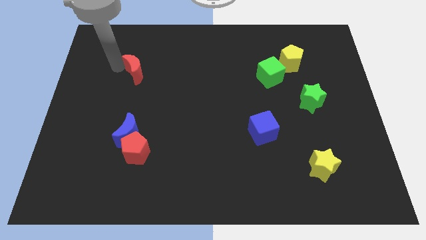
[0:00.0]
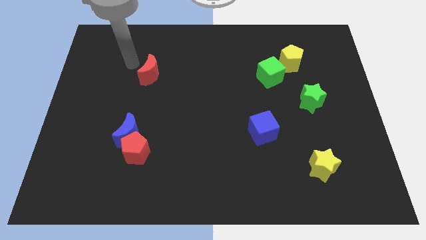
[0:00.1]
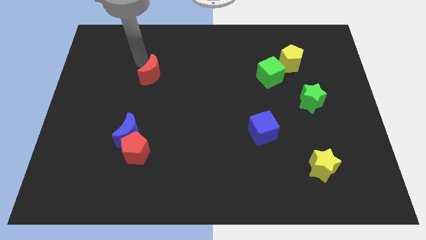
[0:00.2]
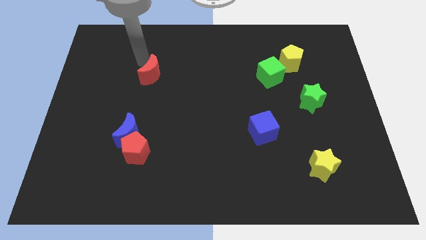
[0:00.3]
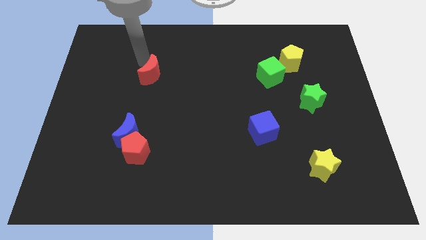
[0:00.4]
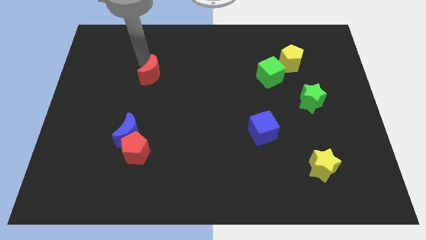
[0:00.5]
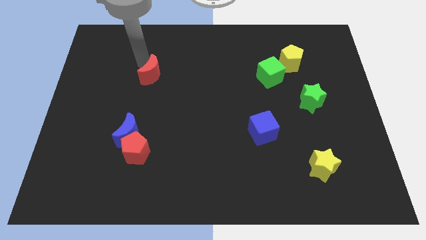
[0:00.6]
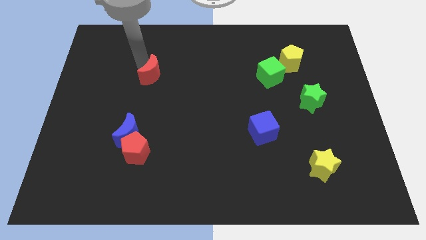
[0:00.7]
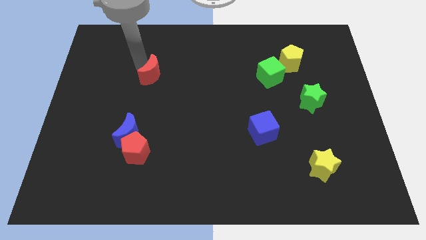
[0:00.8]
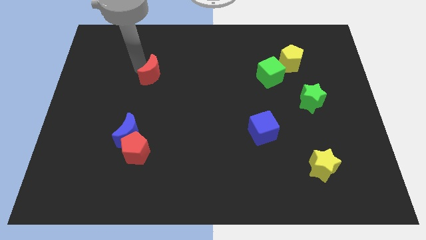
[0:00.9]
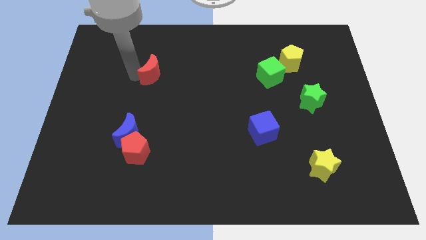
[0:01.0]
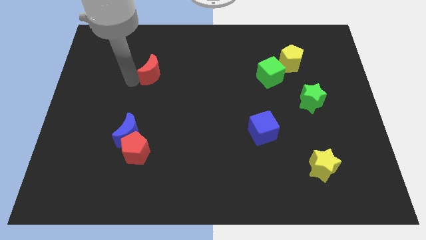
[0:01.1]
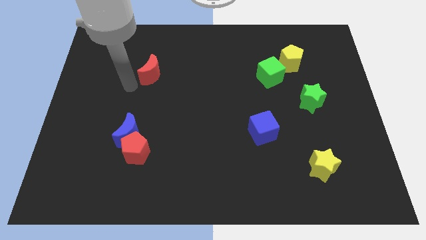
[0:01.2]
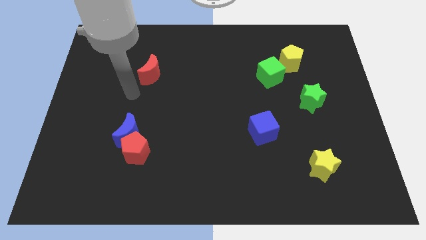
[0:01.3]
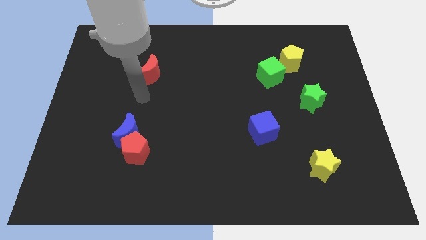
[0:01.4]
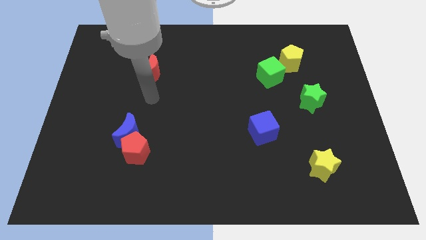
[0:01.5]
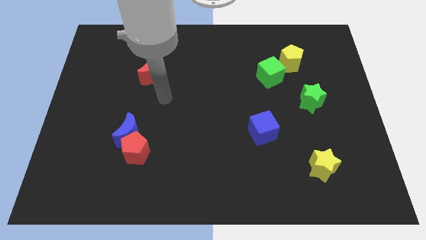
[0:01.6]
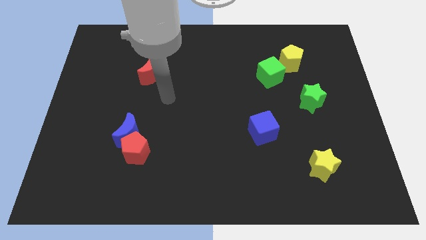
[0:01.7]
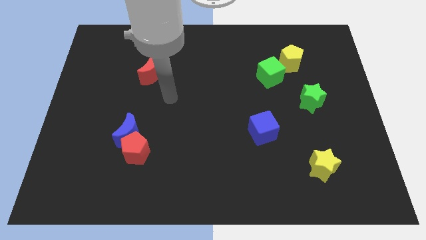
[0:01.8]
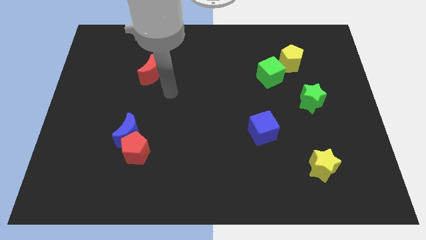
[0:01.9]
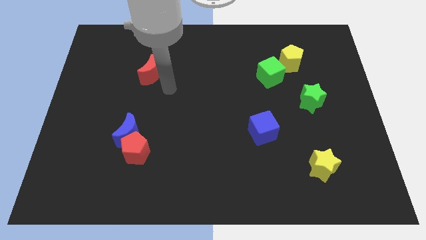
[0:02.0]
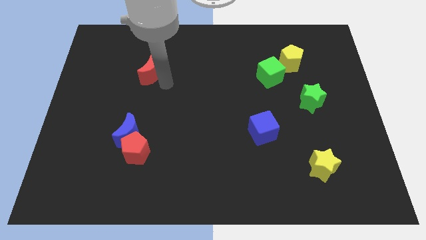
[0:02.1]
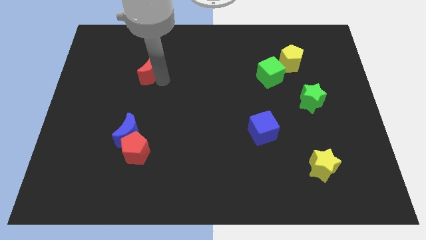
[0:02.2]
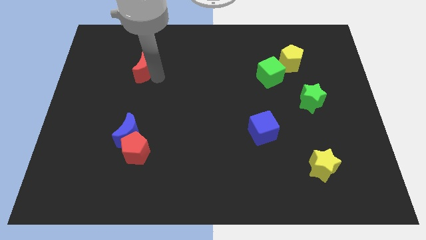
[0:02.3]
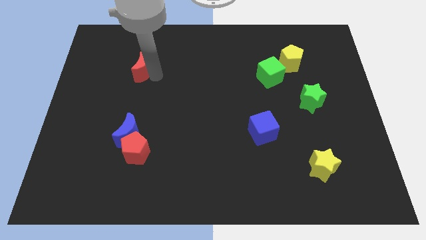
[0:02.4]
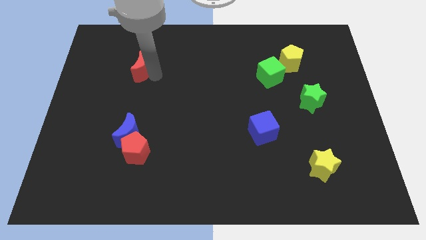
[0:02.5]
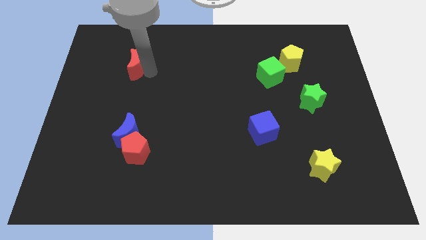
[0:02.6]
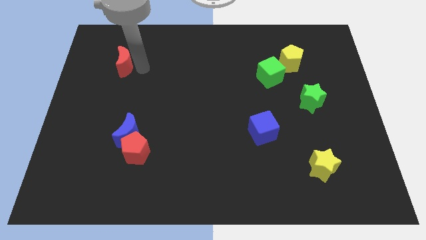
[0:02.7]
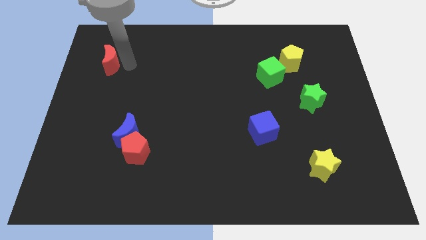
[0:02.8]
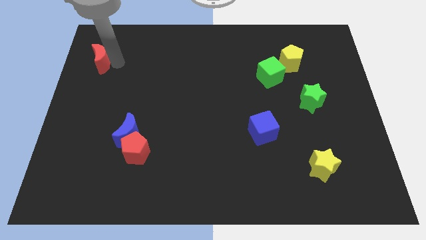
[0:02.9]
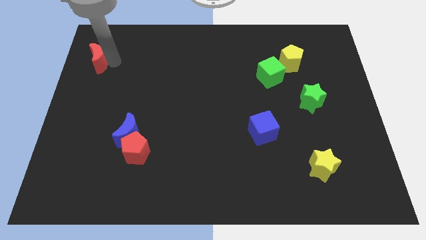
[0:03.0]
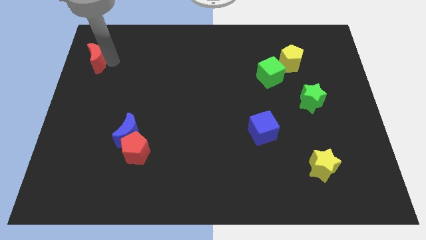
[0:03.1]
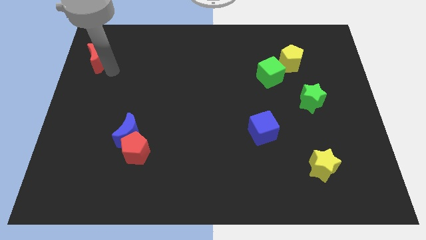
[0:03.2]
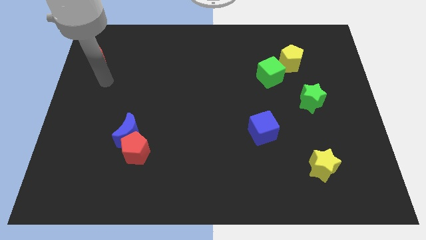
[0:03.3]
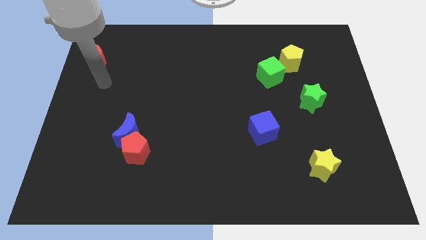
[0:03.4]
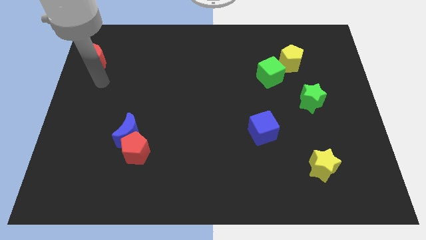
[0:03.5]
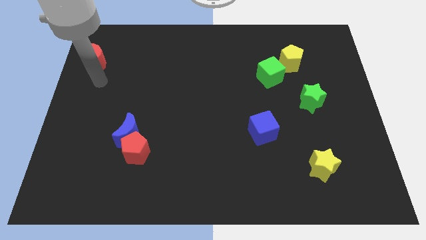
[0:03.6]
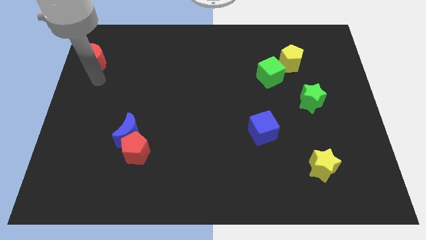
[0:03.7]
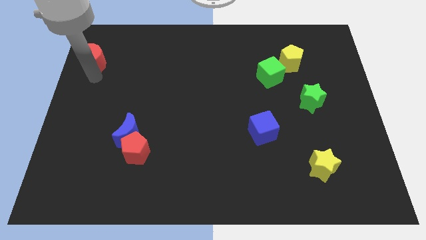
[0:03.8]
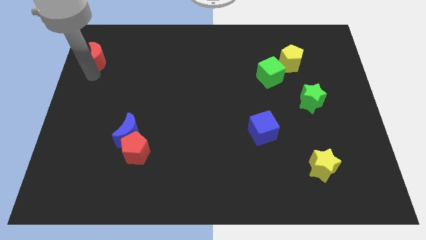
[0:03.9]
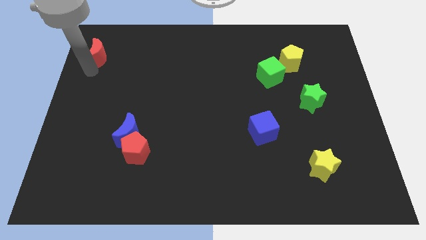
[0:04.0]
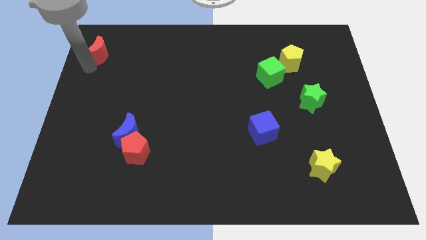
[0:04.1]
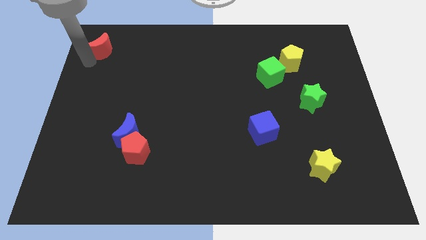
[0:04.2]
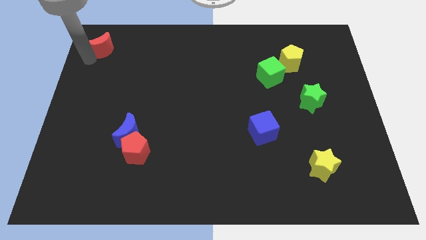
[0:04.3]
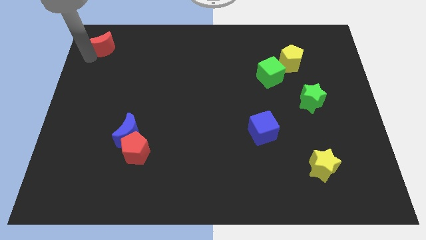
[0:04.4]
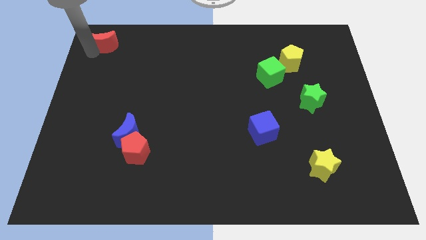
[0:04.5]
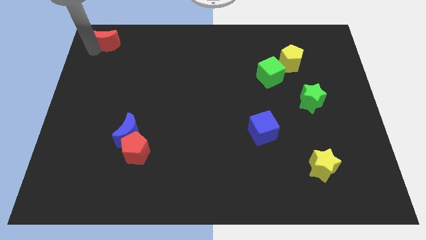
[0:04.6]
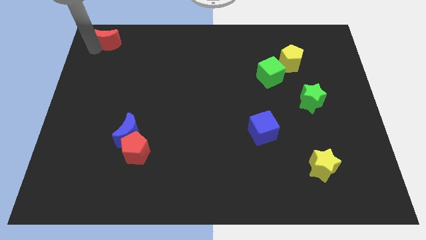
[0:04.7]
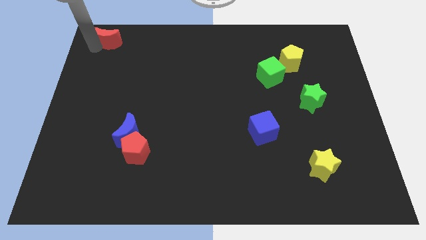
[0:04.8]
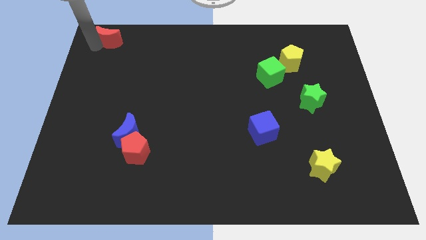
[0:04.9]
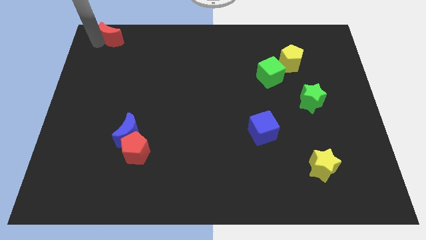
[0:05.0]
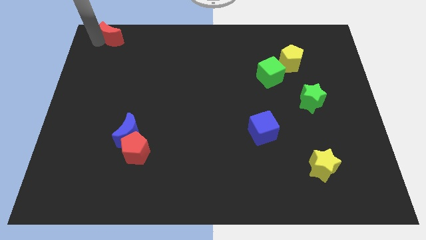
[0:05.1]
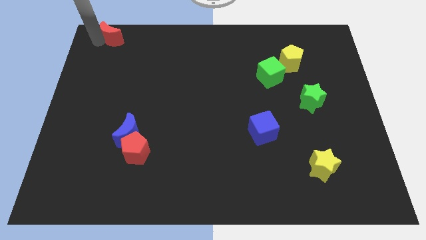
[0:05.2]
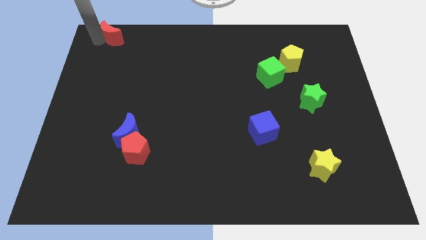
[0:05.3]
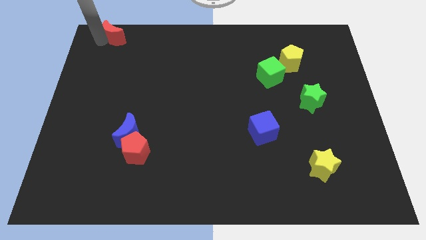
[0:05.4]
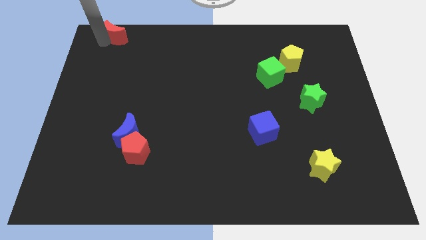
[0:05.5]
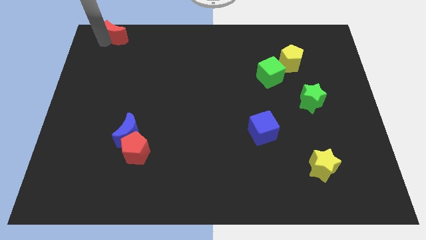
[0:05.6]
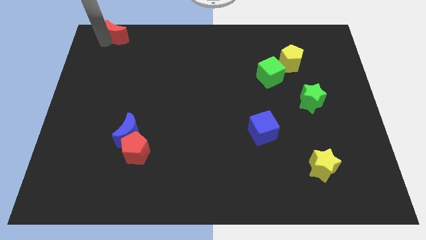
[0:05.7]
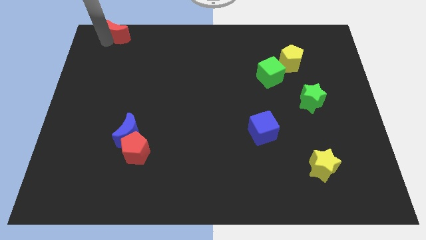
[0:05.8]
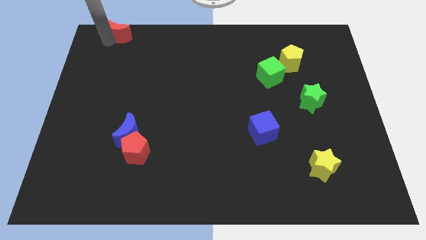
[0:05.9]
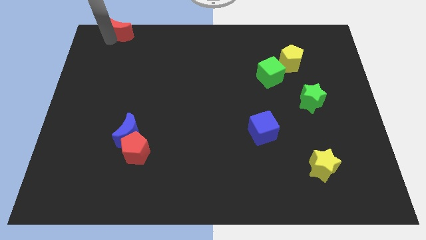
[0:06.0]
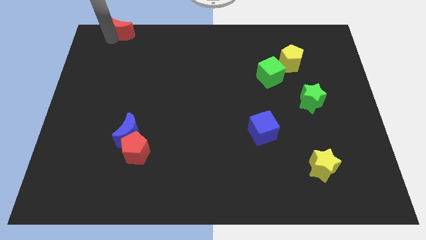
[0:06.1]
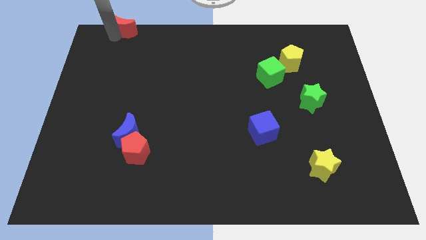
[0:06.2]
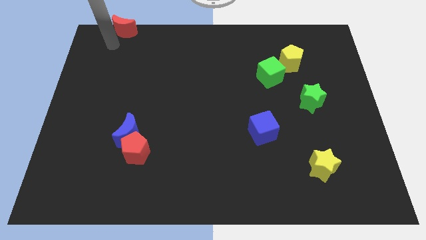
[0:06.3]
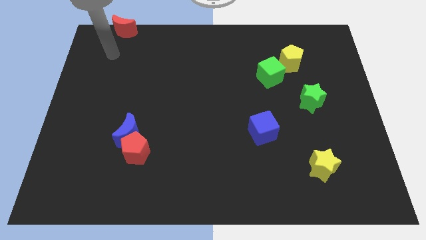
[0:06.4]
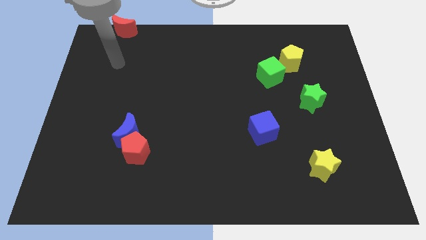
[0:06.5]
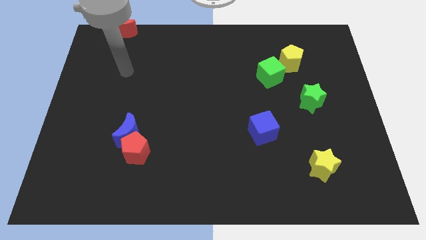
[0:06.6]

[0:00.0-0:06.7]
place red crescent at top left of the board

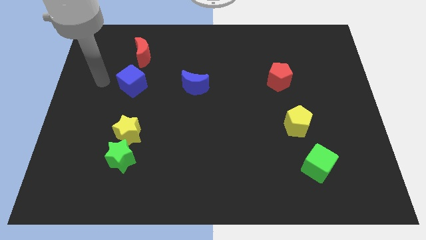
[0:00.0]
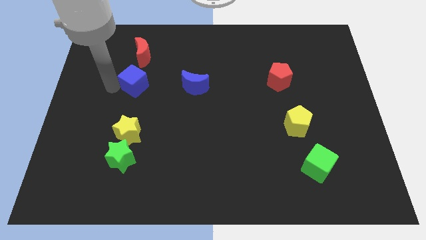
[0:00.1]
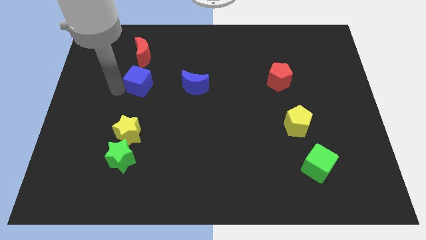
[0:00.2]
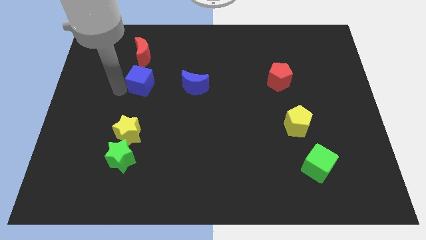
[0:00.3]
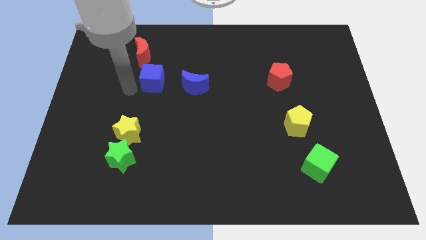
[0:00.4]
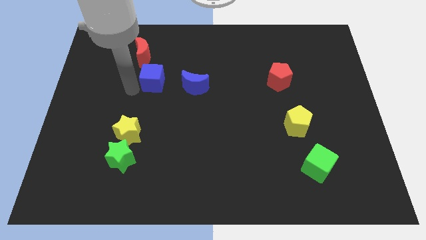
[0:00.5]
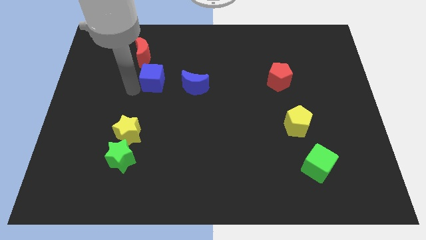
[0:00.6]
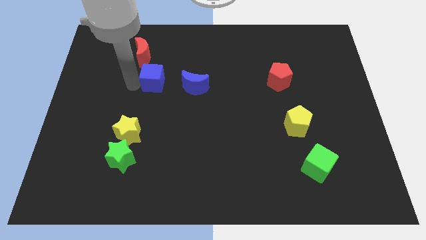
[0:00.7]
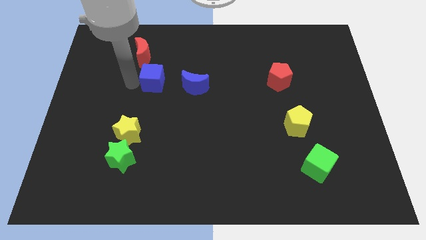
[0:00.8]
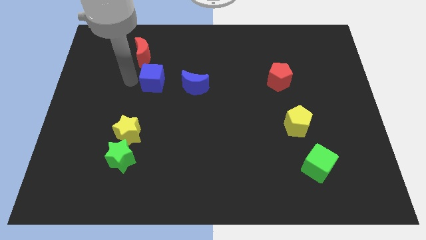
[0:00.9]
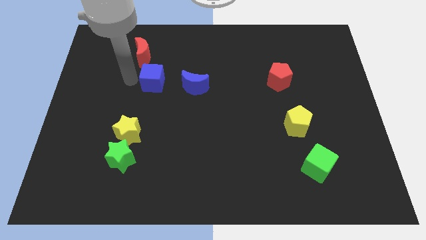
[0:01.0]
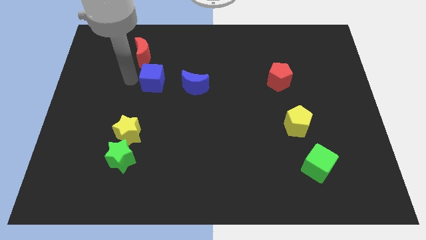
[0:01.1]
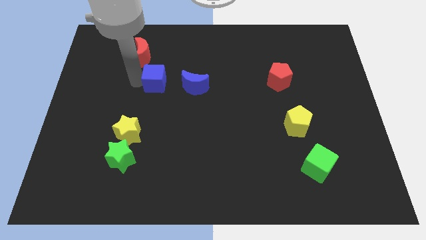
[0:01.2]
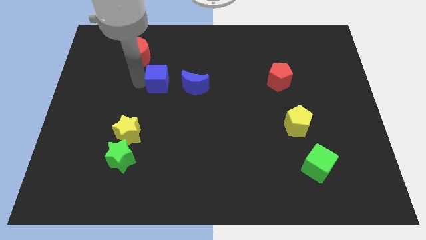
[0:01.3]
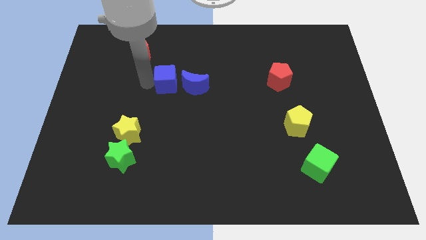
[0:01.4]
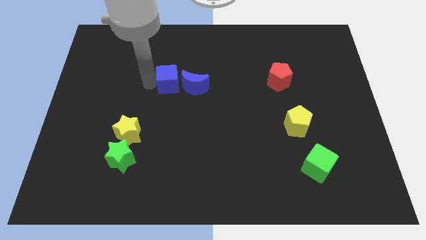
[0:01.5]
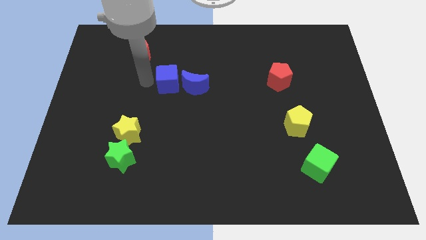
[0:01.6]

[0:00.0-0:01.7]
place the blue cube to the left side of the blue crescent

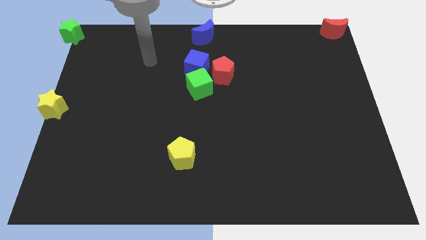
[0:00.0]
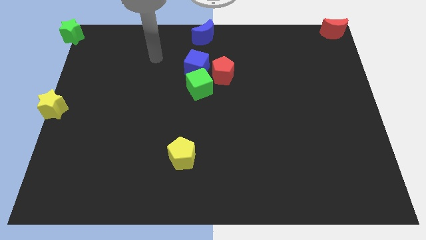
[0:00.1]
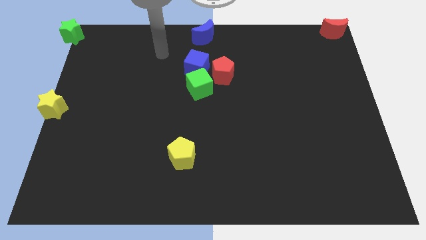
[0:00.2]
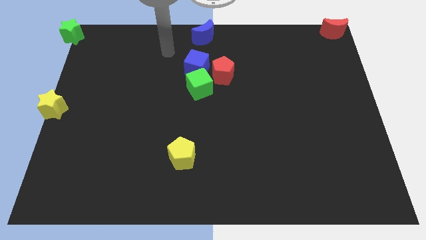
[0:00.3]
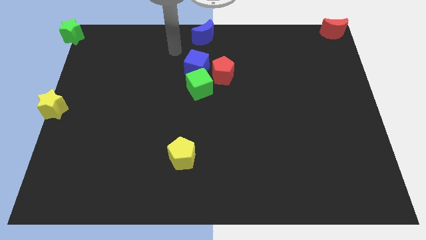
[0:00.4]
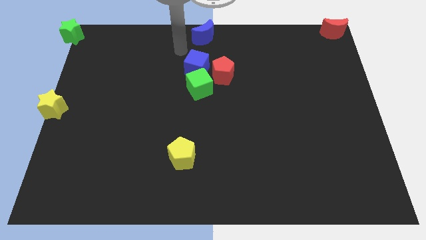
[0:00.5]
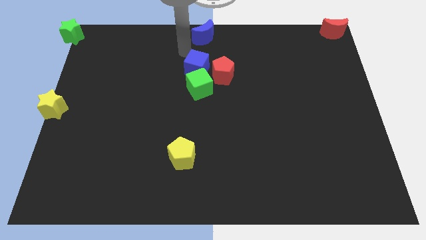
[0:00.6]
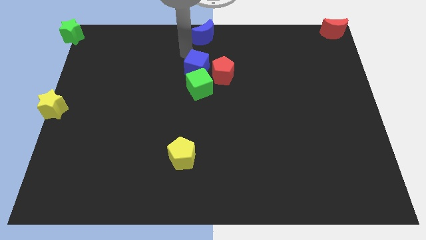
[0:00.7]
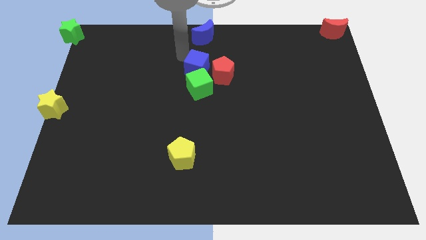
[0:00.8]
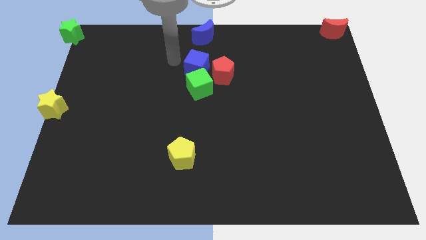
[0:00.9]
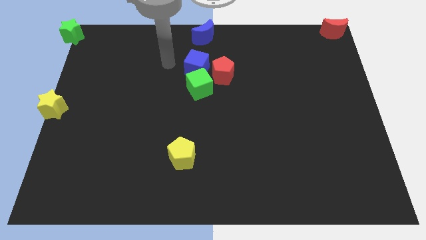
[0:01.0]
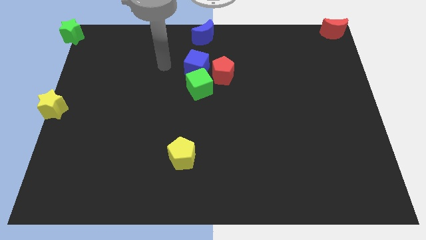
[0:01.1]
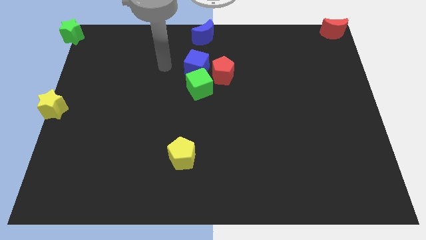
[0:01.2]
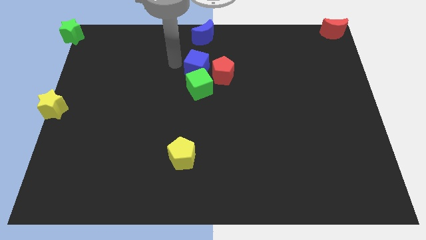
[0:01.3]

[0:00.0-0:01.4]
move your arm to the left side of the blue cube
